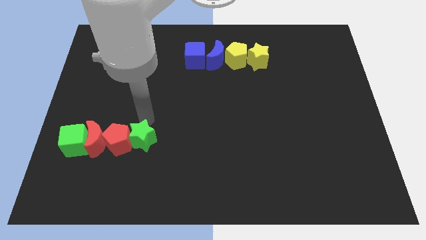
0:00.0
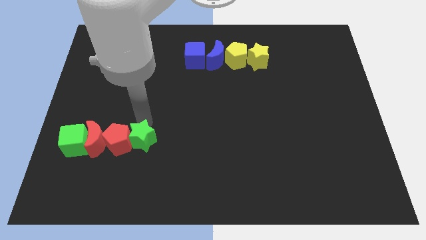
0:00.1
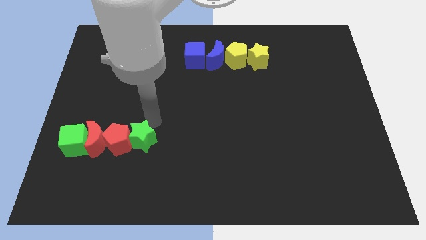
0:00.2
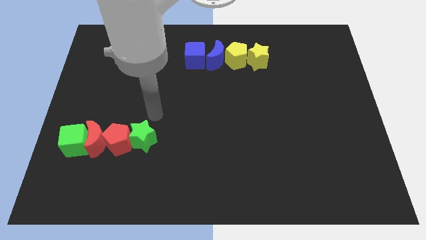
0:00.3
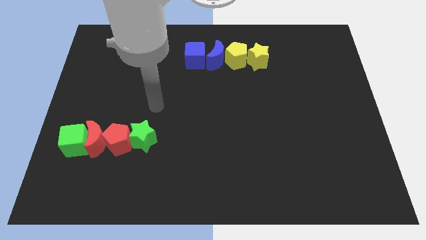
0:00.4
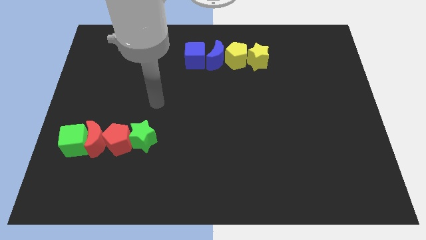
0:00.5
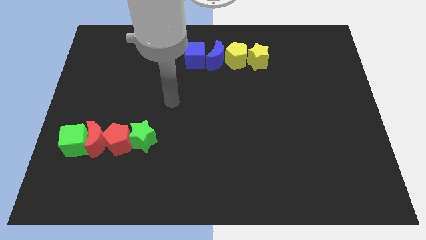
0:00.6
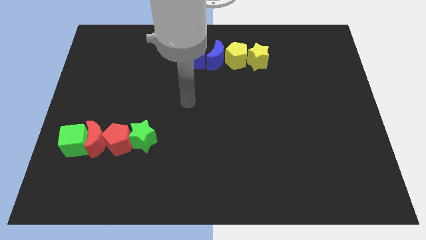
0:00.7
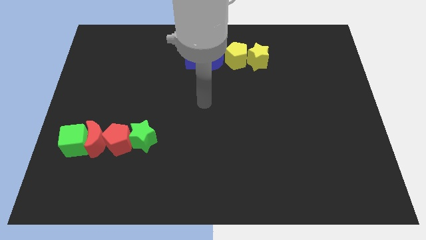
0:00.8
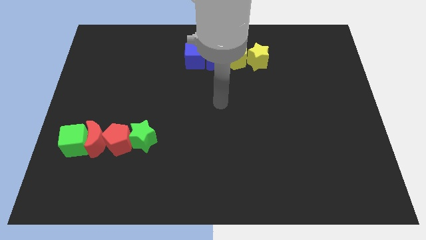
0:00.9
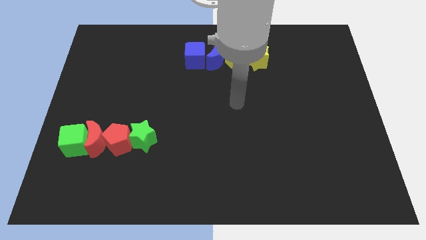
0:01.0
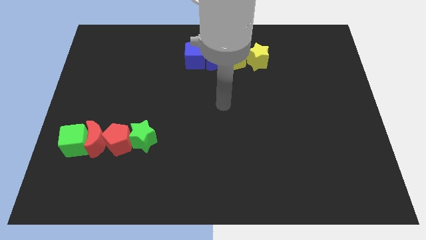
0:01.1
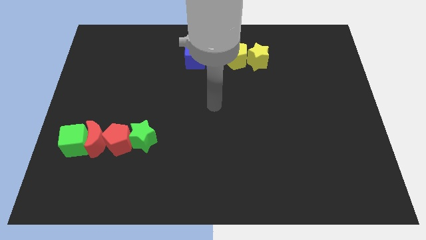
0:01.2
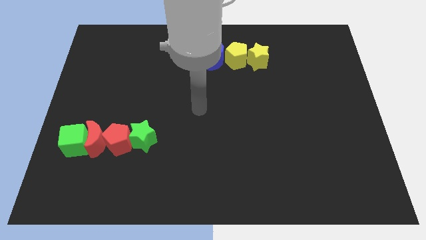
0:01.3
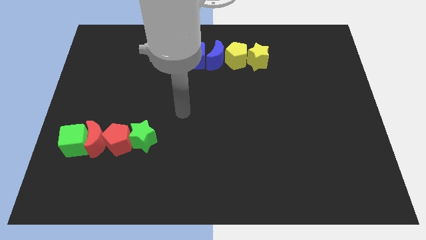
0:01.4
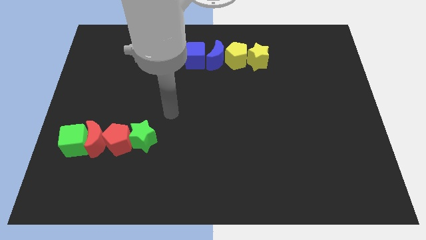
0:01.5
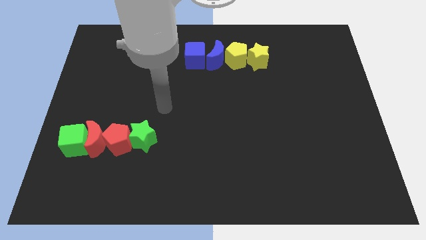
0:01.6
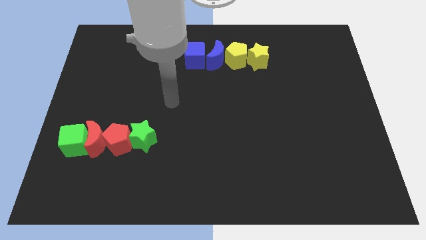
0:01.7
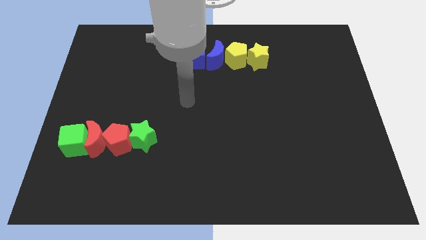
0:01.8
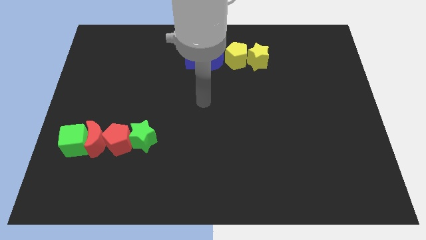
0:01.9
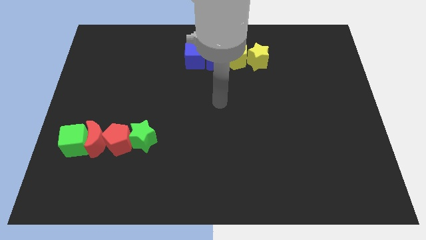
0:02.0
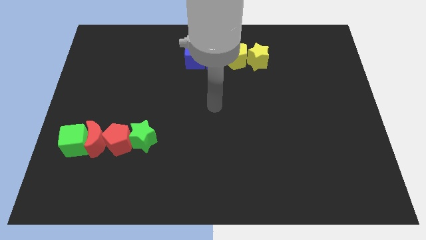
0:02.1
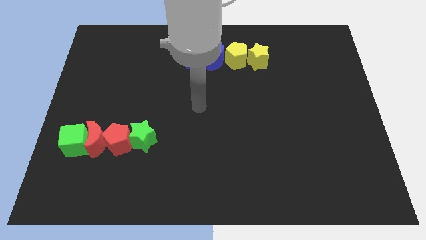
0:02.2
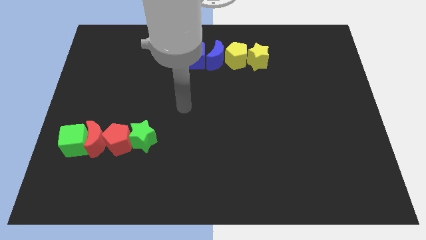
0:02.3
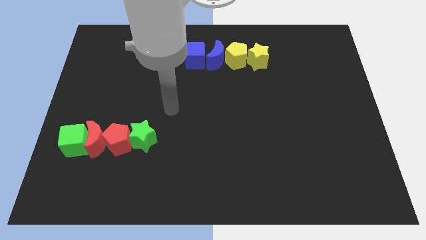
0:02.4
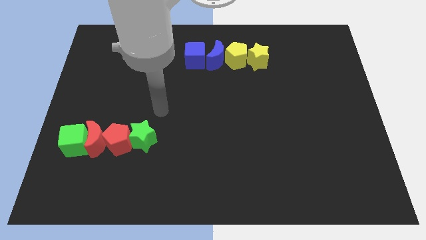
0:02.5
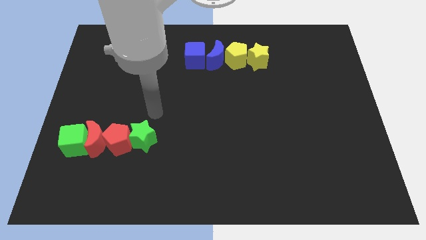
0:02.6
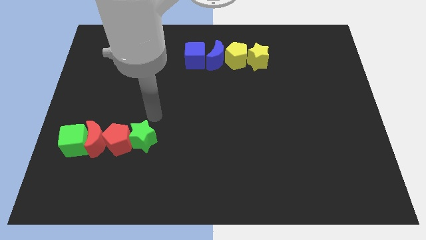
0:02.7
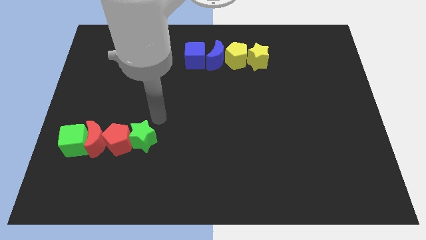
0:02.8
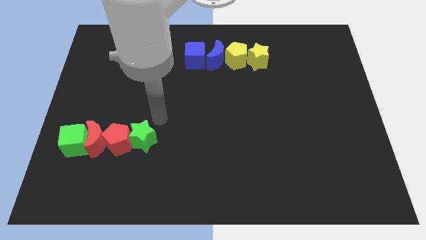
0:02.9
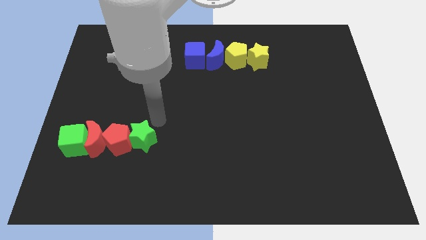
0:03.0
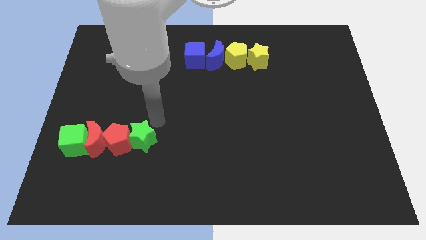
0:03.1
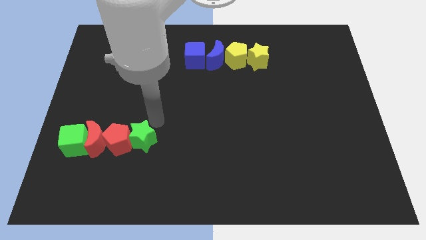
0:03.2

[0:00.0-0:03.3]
go away from the green star

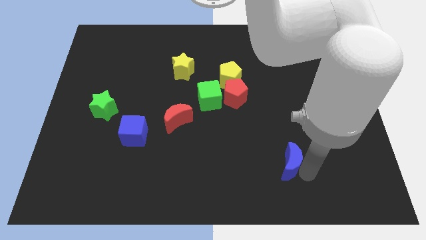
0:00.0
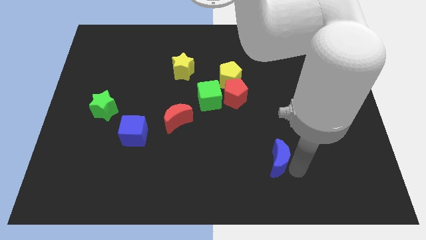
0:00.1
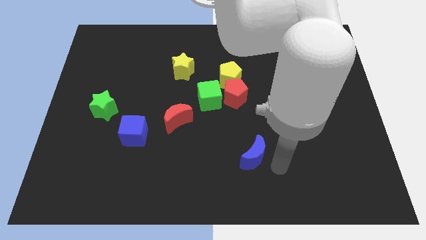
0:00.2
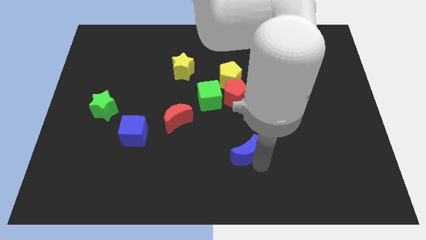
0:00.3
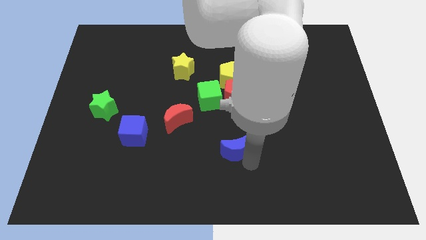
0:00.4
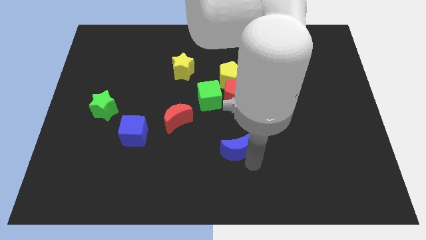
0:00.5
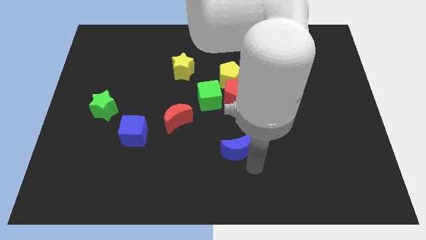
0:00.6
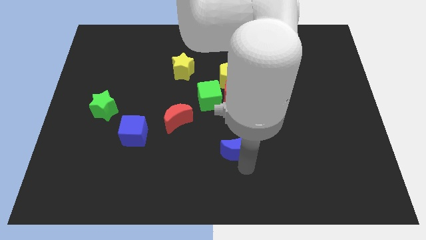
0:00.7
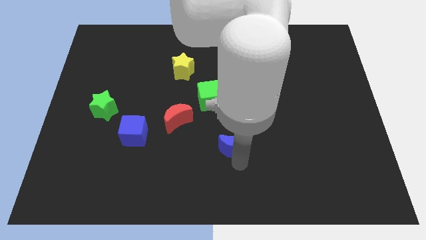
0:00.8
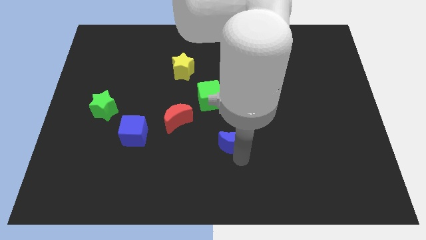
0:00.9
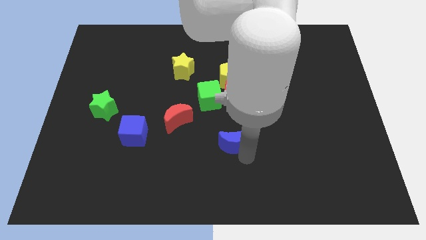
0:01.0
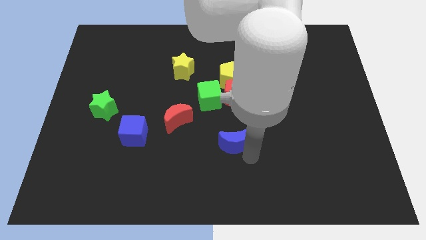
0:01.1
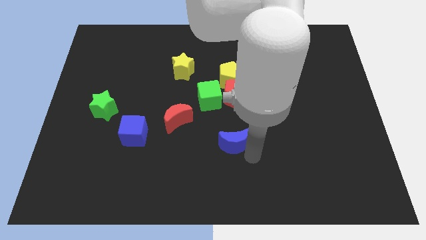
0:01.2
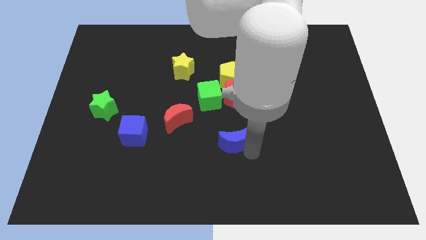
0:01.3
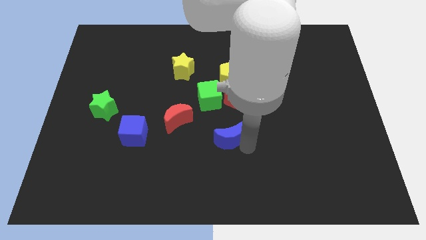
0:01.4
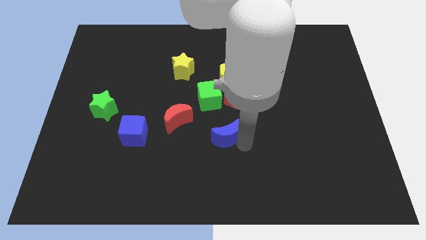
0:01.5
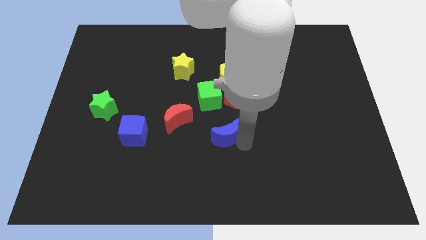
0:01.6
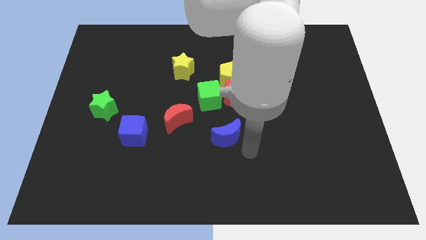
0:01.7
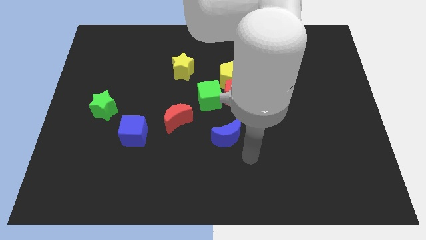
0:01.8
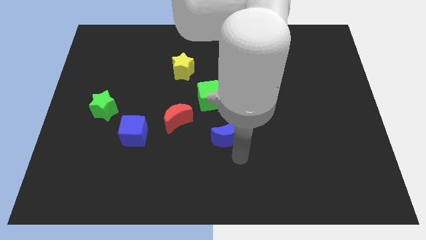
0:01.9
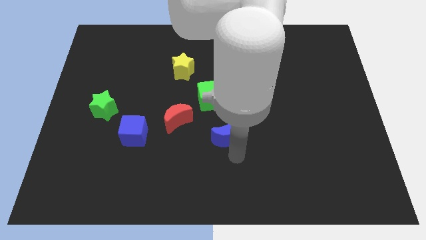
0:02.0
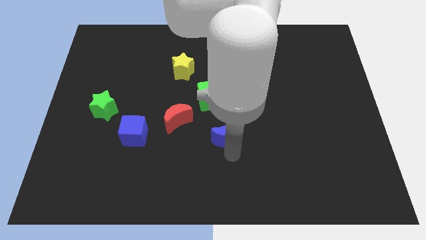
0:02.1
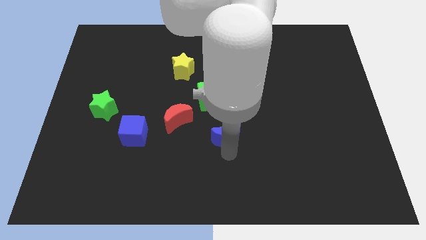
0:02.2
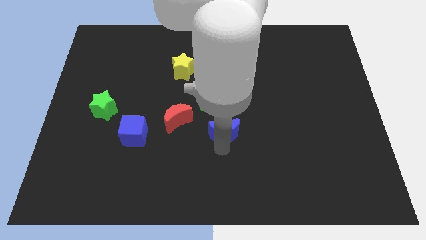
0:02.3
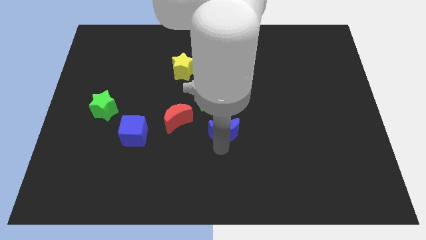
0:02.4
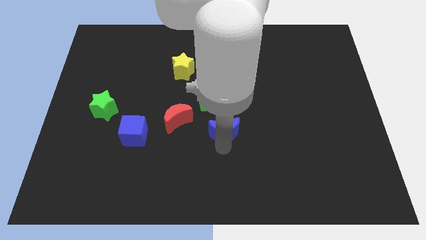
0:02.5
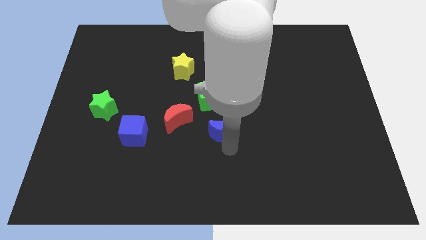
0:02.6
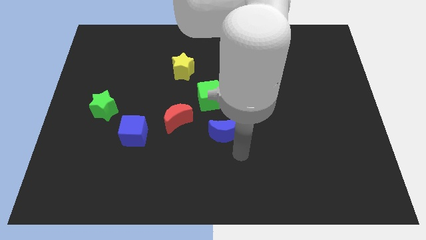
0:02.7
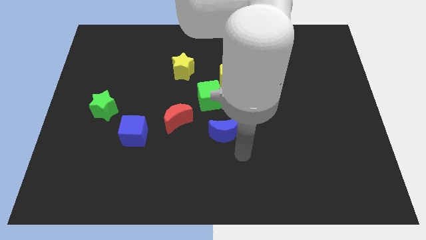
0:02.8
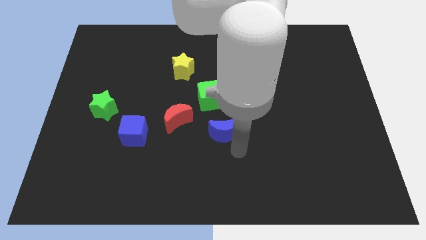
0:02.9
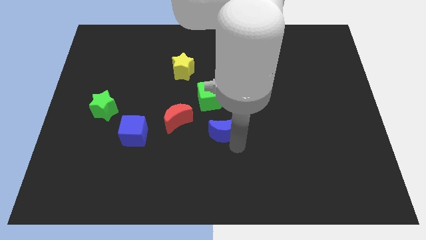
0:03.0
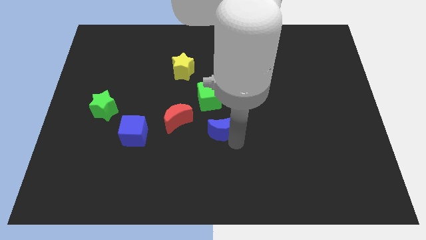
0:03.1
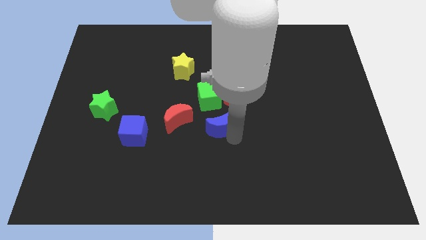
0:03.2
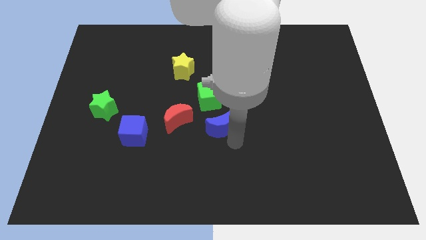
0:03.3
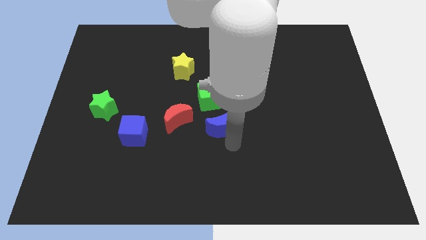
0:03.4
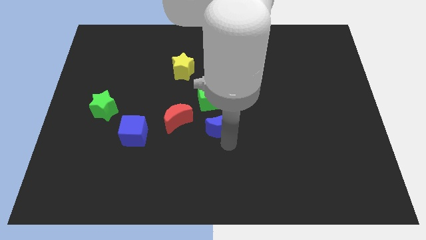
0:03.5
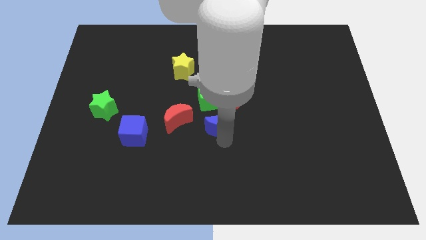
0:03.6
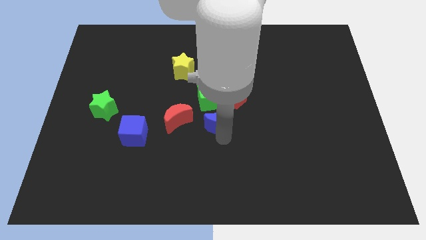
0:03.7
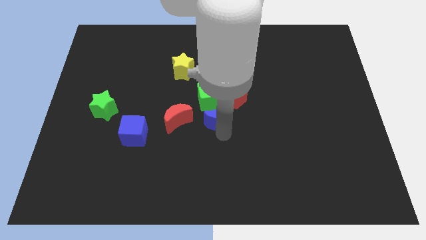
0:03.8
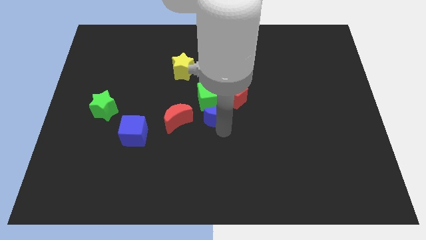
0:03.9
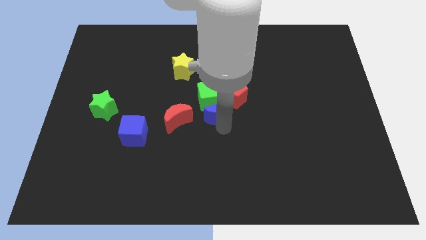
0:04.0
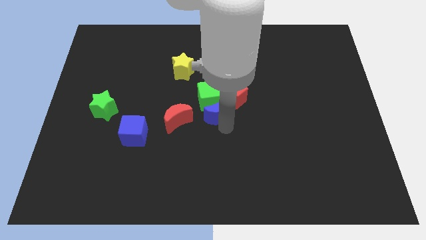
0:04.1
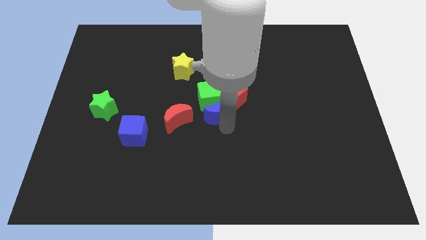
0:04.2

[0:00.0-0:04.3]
push half blue moon to center of the board

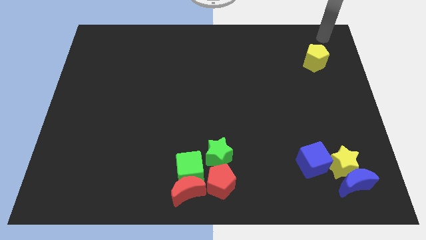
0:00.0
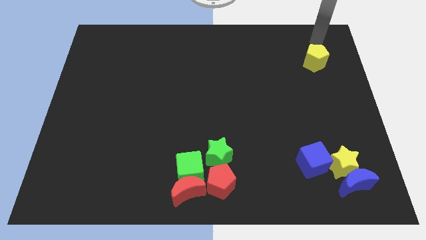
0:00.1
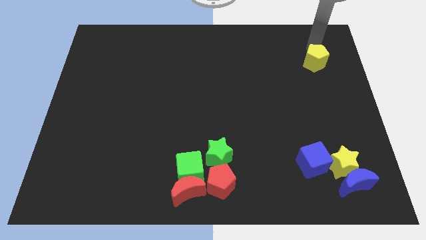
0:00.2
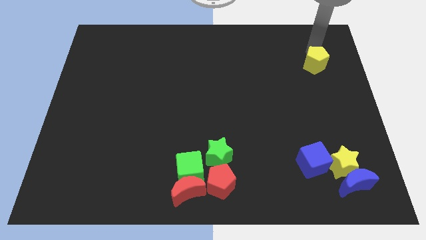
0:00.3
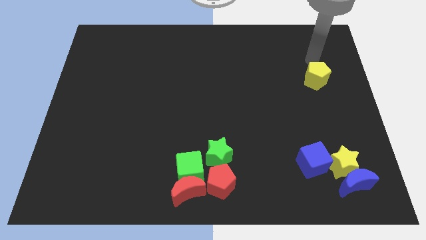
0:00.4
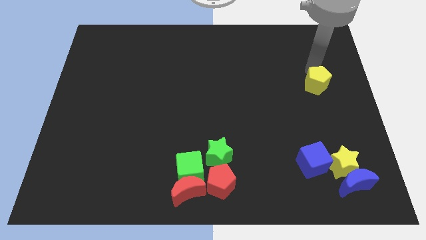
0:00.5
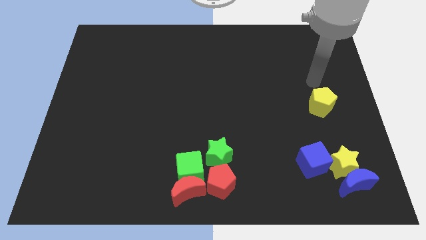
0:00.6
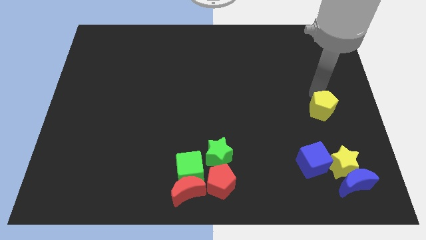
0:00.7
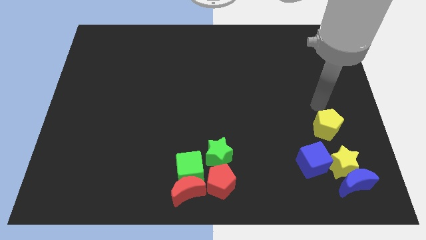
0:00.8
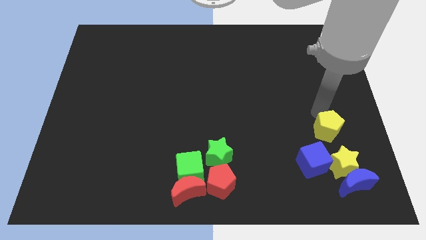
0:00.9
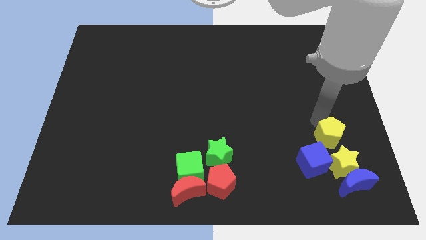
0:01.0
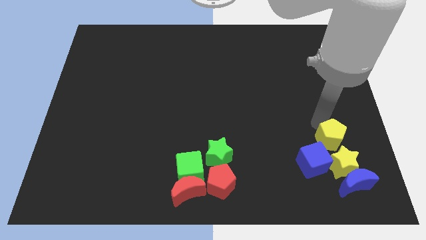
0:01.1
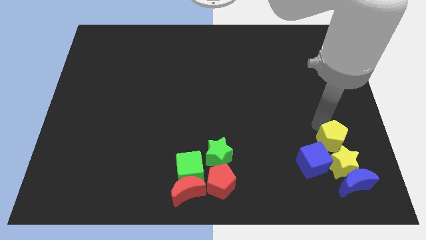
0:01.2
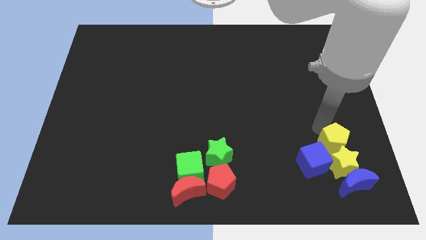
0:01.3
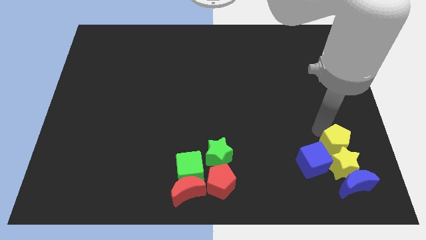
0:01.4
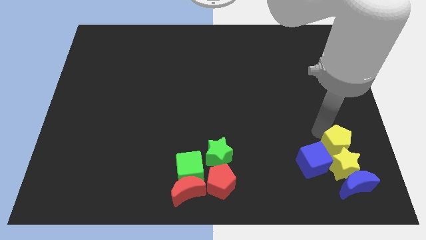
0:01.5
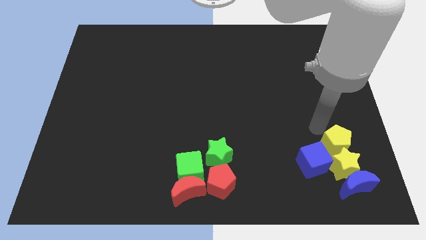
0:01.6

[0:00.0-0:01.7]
move the yellow pentagon into the yellow star
